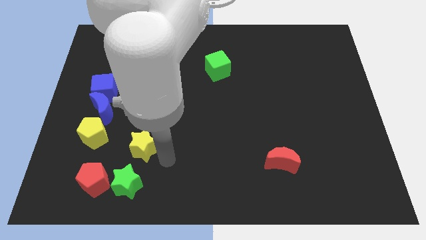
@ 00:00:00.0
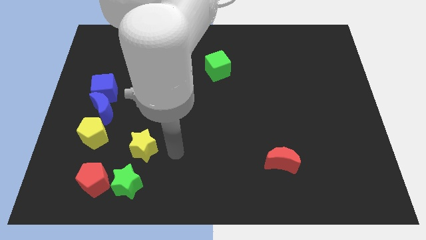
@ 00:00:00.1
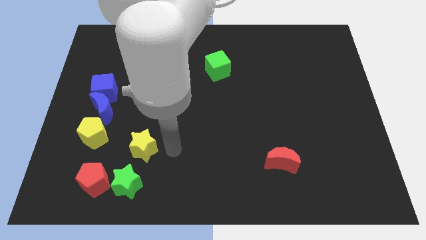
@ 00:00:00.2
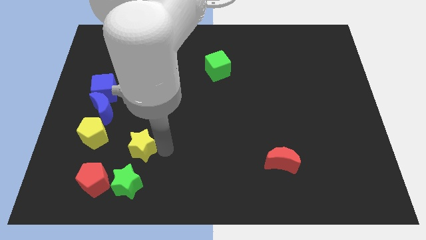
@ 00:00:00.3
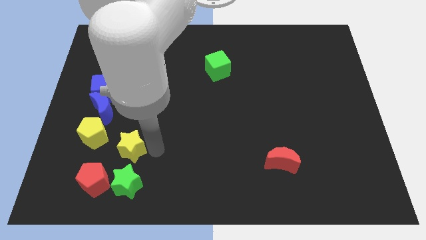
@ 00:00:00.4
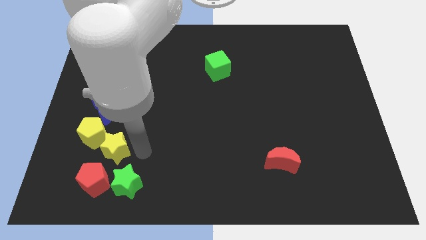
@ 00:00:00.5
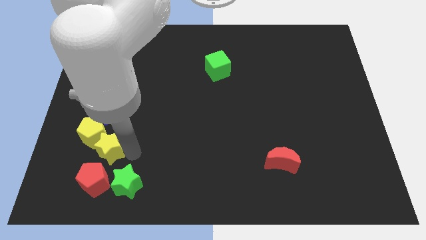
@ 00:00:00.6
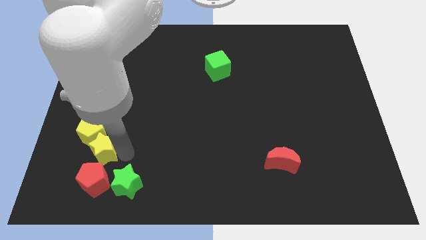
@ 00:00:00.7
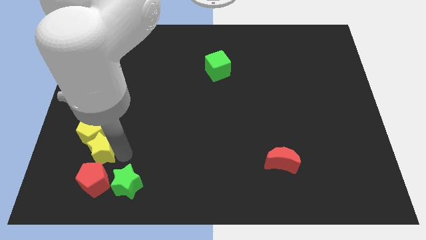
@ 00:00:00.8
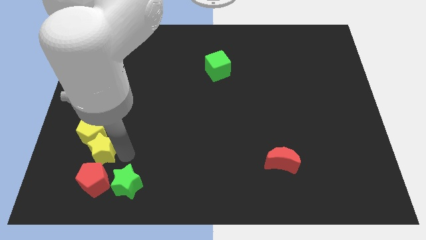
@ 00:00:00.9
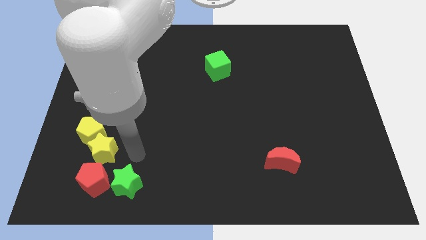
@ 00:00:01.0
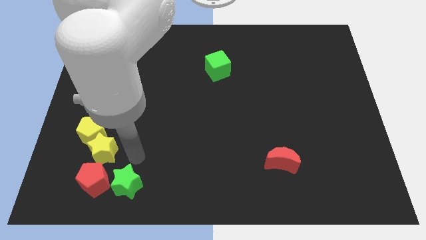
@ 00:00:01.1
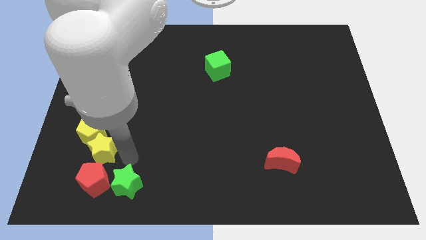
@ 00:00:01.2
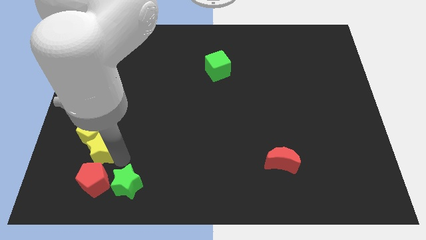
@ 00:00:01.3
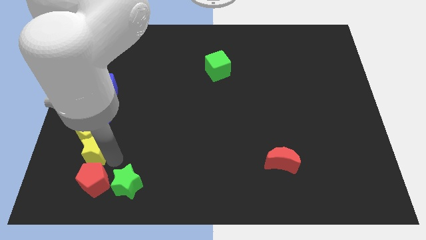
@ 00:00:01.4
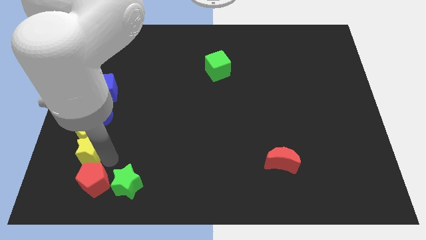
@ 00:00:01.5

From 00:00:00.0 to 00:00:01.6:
slide the yellow star into the yellow pentagon

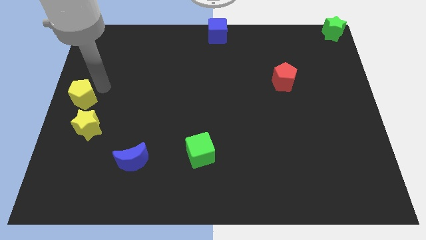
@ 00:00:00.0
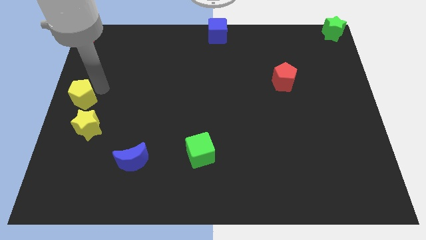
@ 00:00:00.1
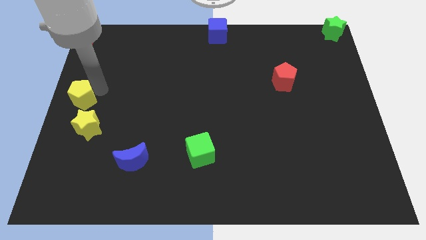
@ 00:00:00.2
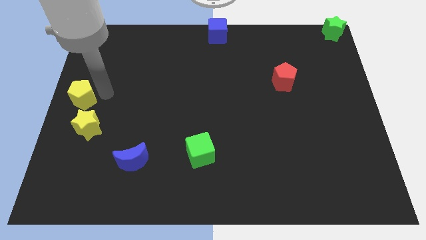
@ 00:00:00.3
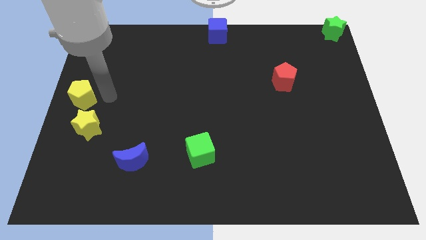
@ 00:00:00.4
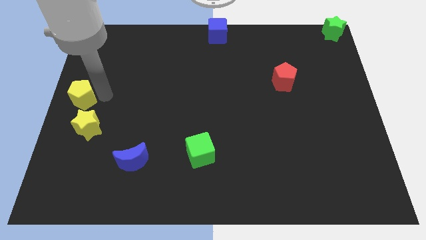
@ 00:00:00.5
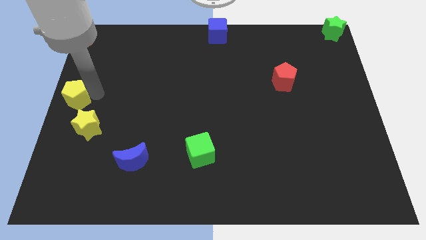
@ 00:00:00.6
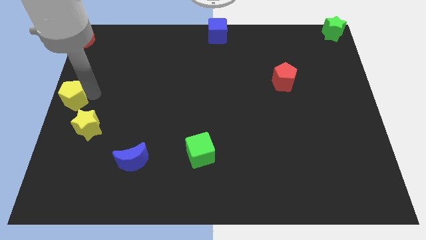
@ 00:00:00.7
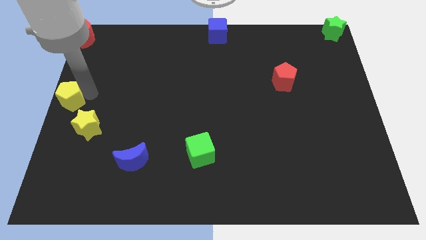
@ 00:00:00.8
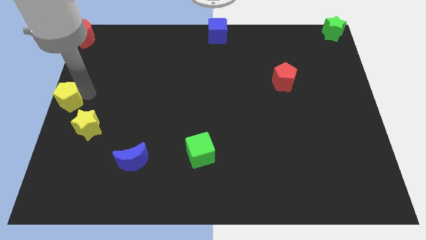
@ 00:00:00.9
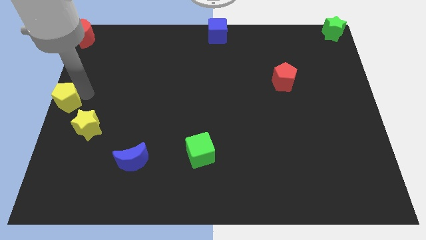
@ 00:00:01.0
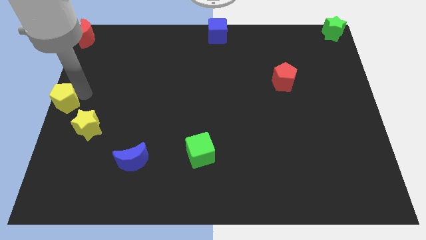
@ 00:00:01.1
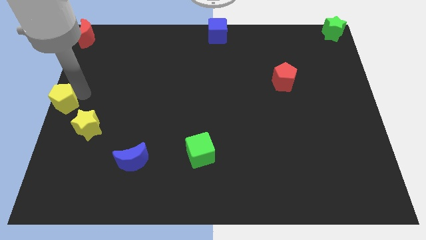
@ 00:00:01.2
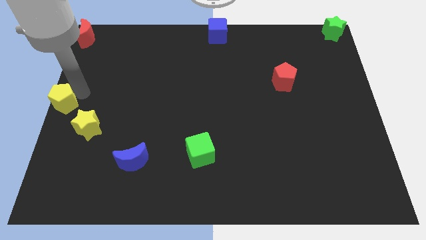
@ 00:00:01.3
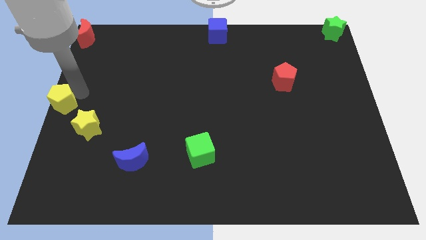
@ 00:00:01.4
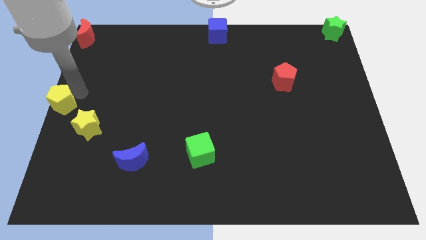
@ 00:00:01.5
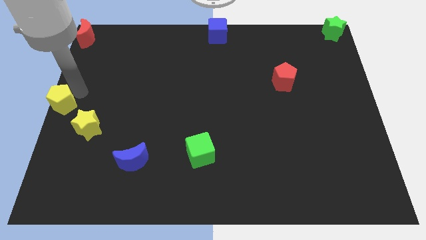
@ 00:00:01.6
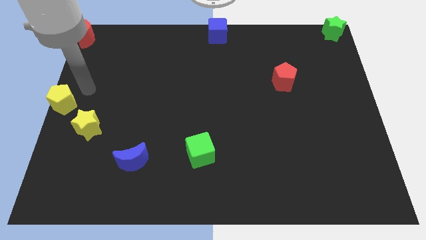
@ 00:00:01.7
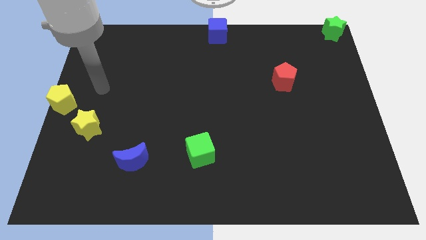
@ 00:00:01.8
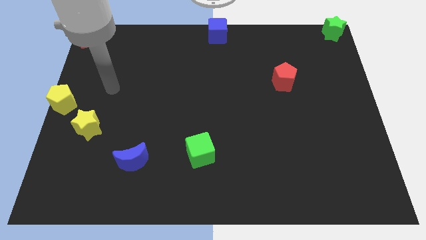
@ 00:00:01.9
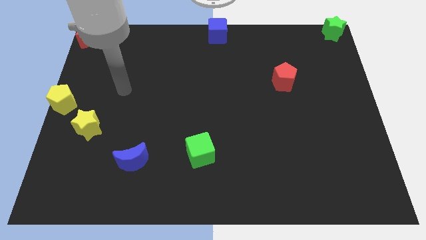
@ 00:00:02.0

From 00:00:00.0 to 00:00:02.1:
move the yellow pentagon to the center left of the board

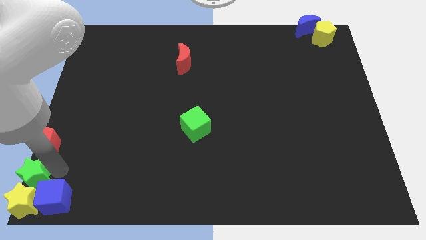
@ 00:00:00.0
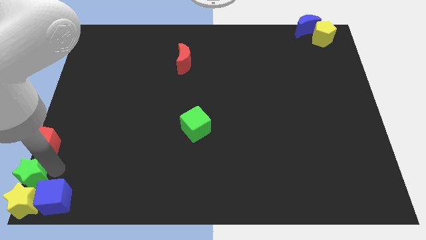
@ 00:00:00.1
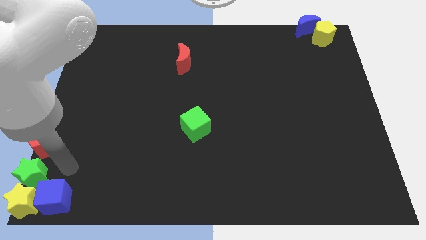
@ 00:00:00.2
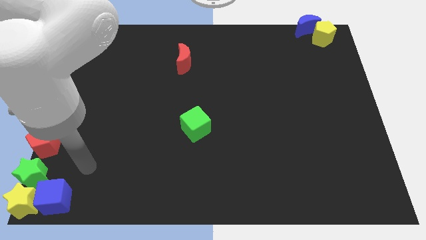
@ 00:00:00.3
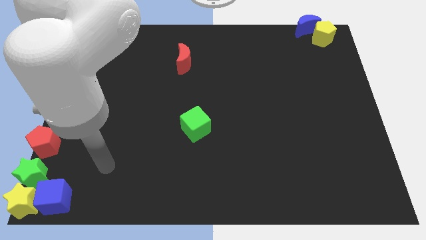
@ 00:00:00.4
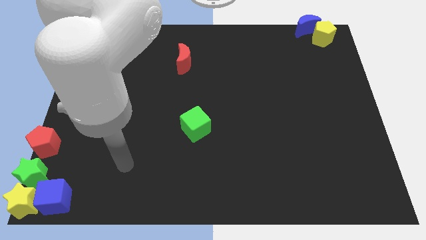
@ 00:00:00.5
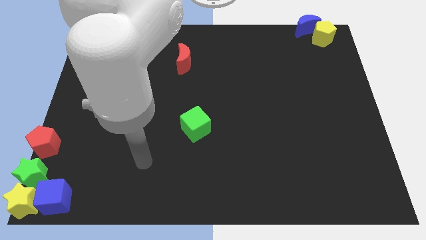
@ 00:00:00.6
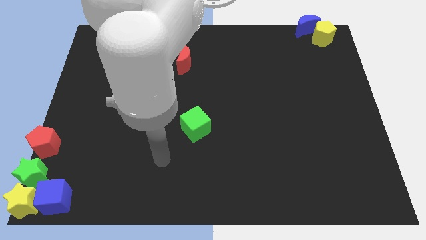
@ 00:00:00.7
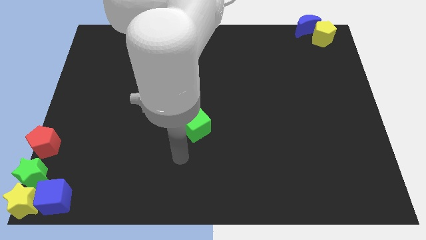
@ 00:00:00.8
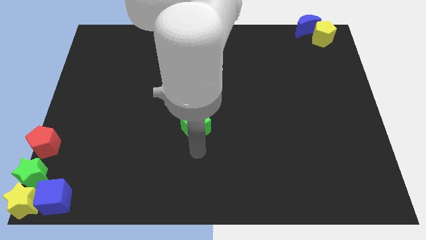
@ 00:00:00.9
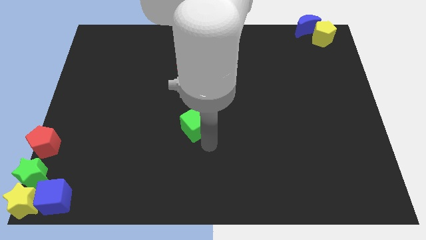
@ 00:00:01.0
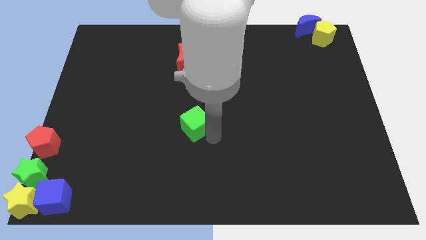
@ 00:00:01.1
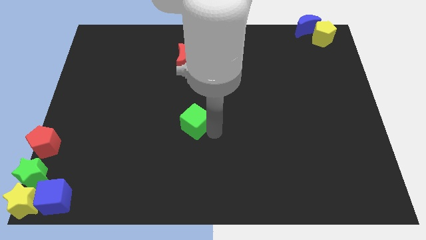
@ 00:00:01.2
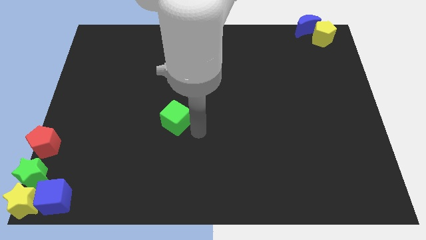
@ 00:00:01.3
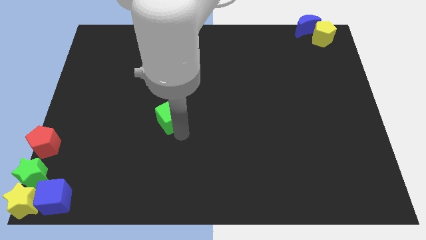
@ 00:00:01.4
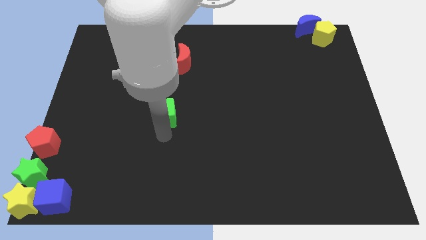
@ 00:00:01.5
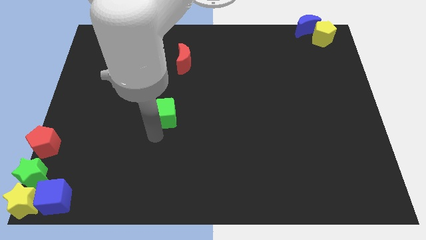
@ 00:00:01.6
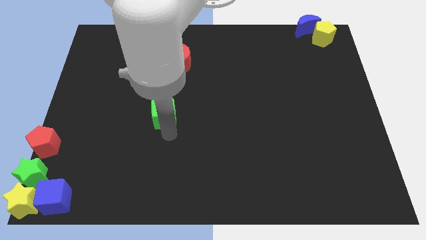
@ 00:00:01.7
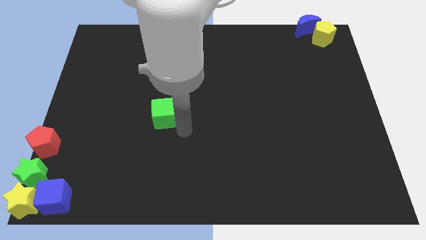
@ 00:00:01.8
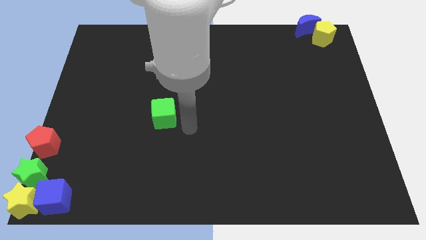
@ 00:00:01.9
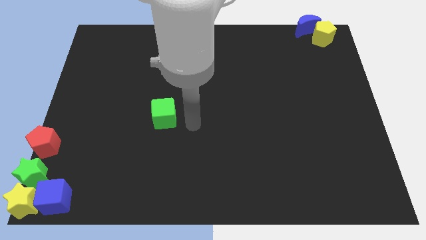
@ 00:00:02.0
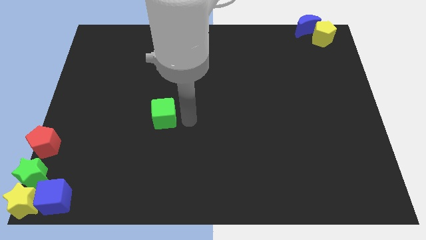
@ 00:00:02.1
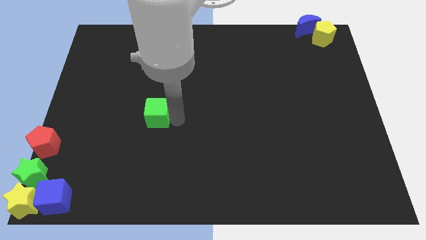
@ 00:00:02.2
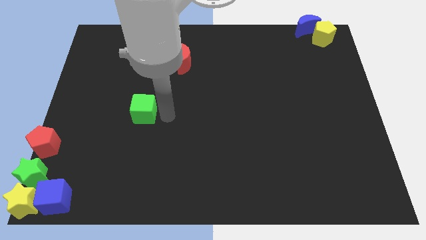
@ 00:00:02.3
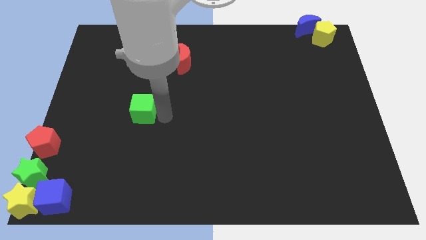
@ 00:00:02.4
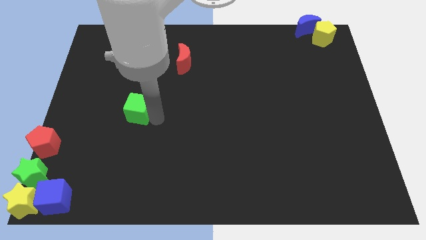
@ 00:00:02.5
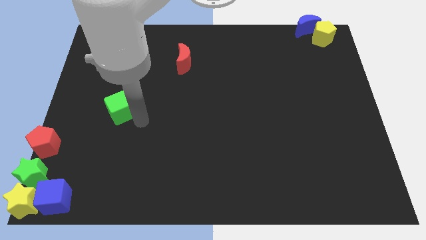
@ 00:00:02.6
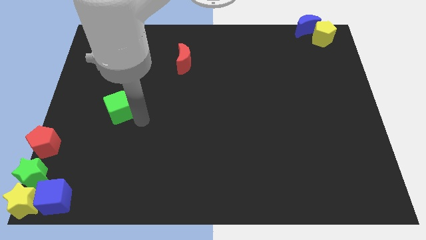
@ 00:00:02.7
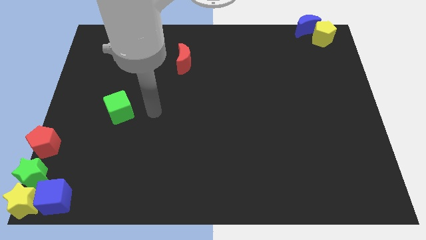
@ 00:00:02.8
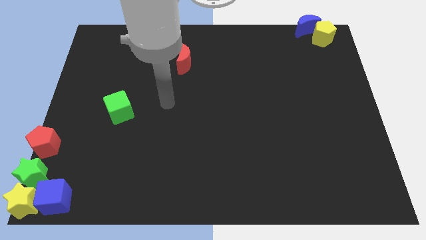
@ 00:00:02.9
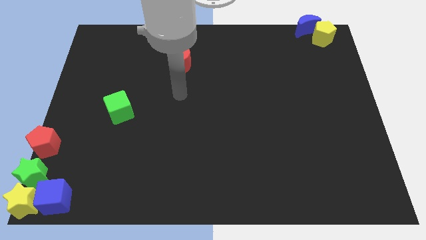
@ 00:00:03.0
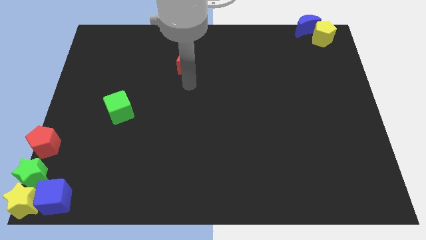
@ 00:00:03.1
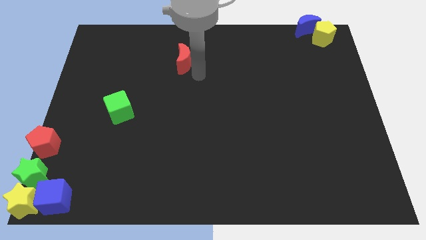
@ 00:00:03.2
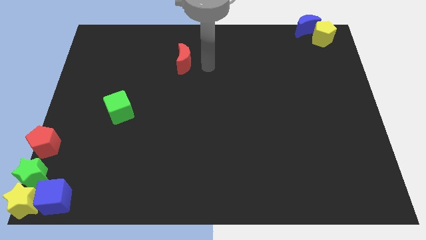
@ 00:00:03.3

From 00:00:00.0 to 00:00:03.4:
move green cube towards the left centre of the board

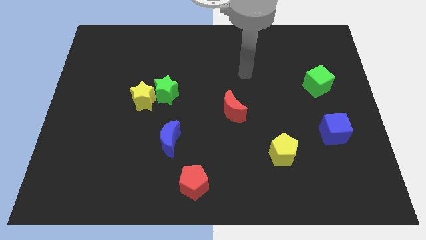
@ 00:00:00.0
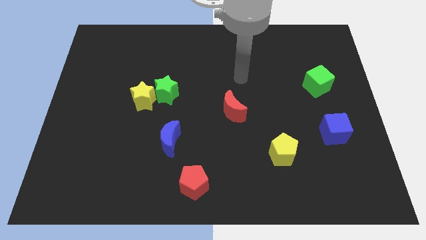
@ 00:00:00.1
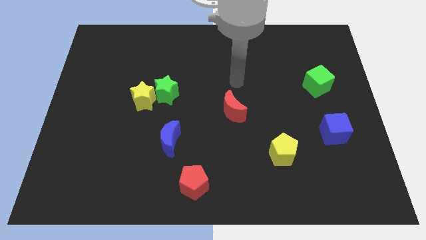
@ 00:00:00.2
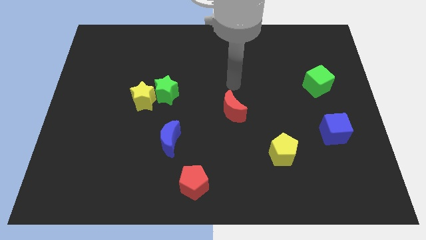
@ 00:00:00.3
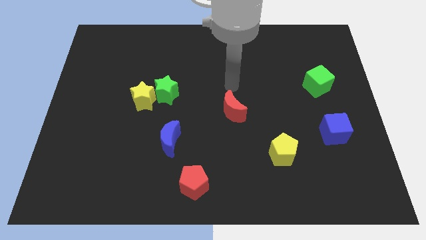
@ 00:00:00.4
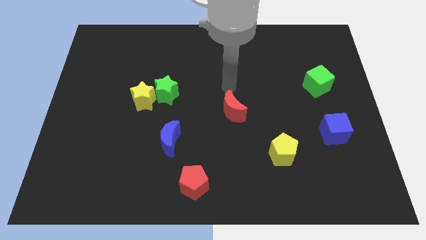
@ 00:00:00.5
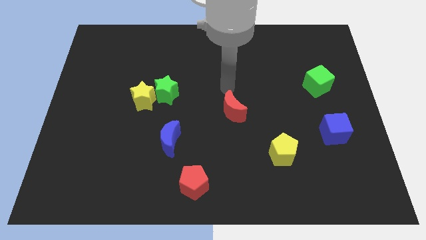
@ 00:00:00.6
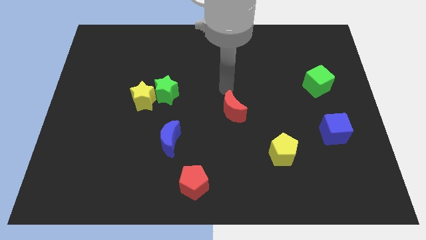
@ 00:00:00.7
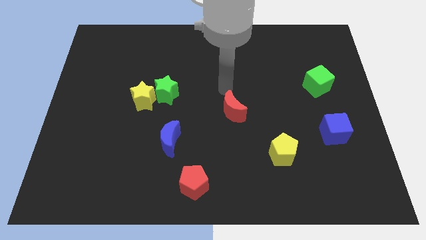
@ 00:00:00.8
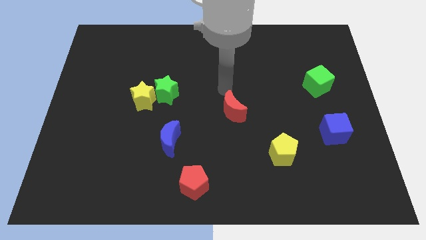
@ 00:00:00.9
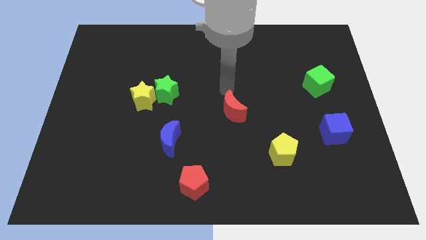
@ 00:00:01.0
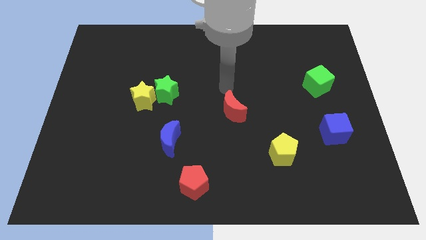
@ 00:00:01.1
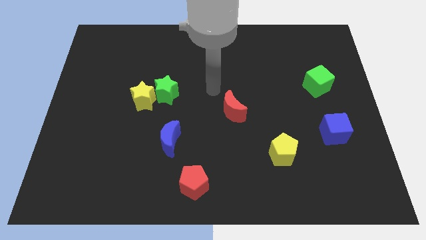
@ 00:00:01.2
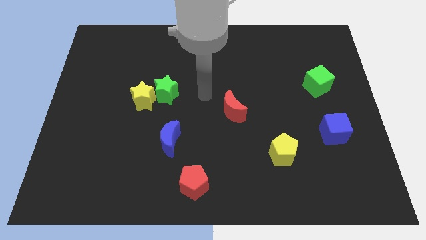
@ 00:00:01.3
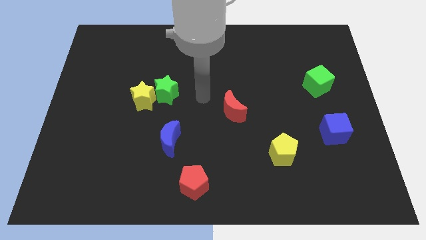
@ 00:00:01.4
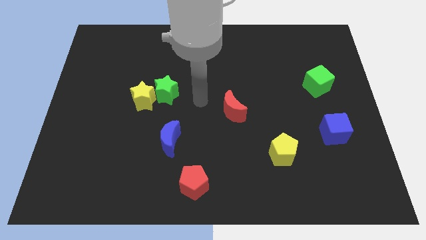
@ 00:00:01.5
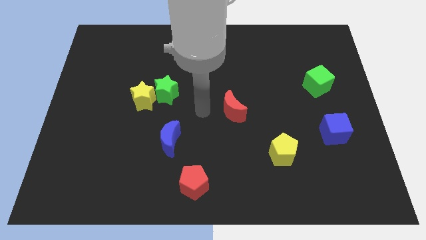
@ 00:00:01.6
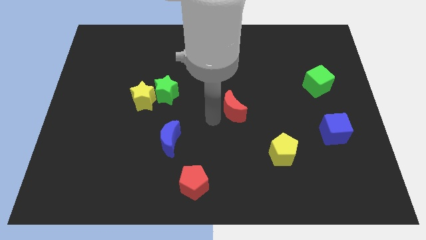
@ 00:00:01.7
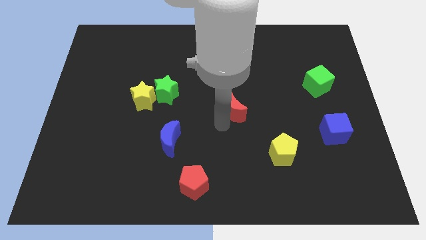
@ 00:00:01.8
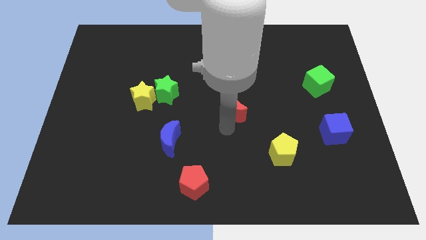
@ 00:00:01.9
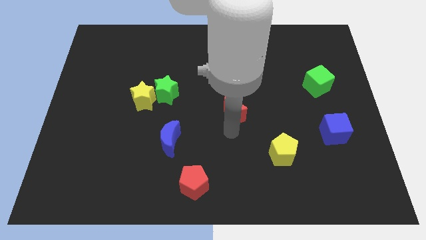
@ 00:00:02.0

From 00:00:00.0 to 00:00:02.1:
move your arm towards the red crescent
